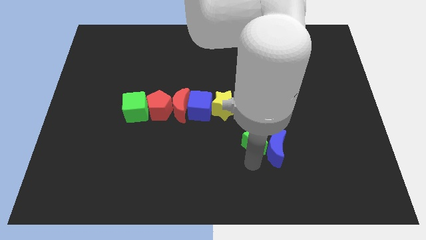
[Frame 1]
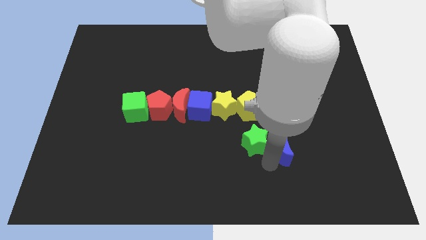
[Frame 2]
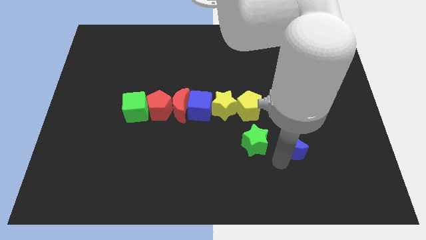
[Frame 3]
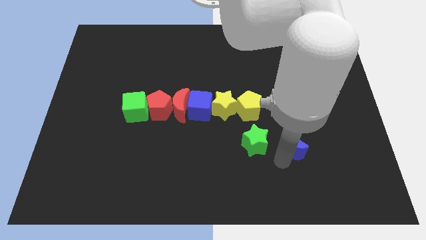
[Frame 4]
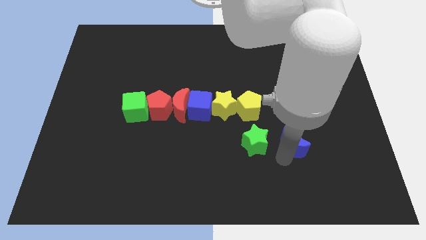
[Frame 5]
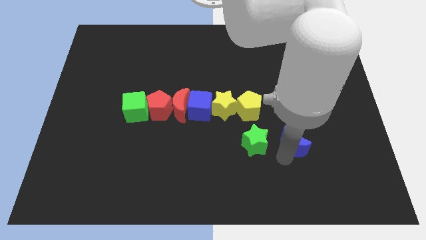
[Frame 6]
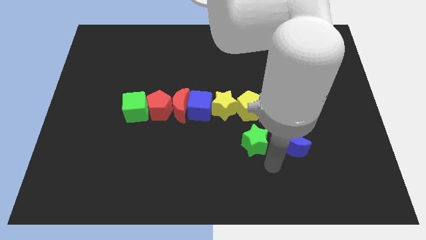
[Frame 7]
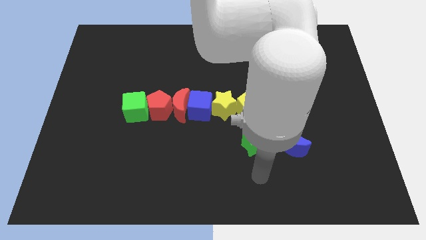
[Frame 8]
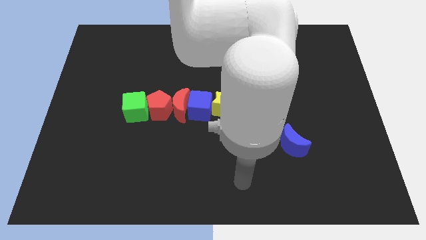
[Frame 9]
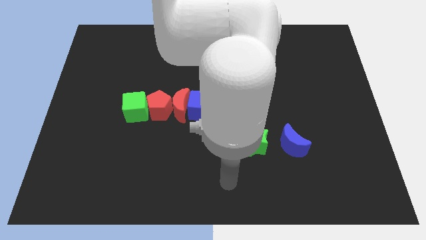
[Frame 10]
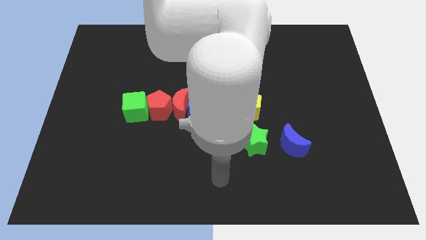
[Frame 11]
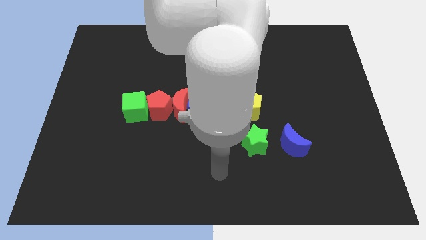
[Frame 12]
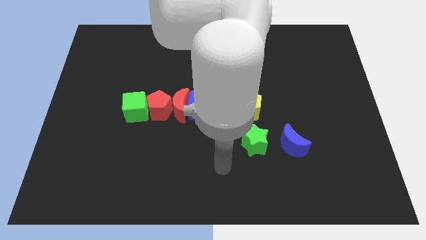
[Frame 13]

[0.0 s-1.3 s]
separate the blue moon from the green star

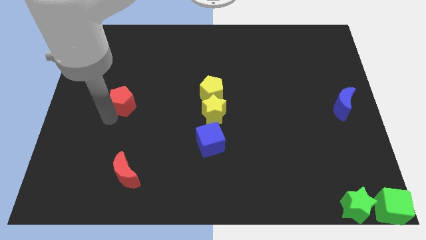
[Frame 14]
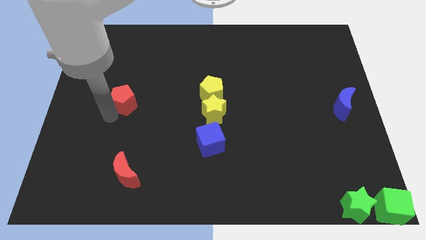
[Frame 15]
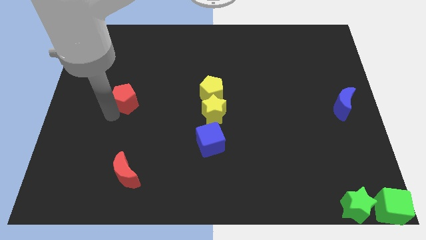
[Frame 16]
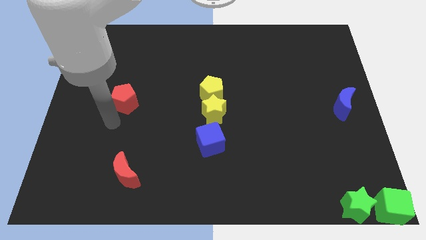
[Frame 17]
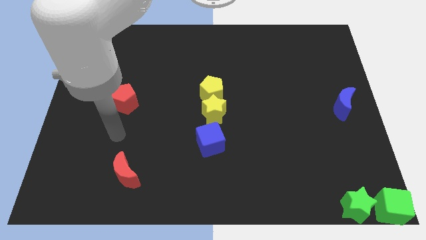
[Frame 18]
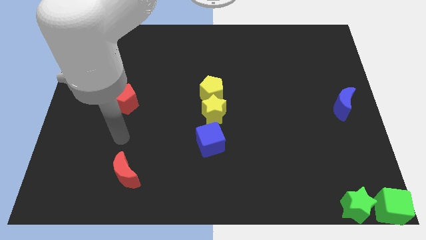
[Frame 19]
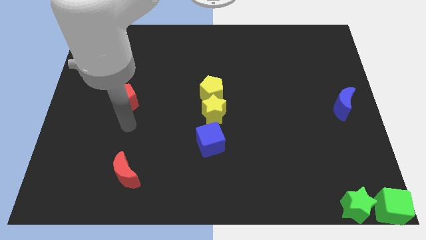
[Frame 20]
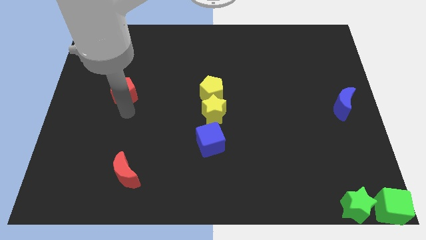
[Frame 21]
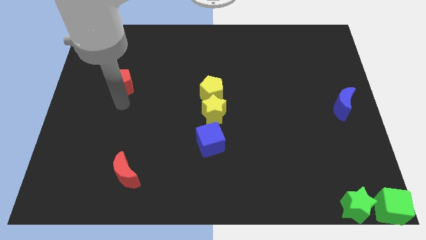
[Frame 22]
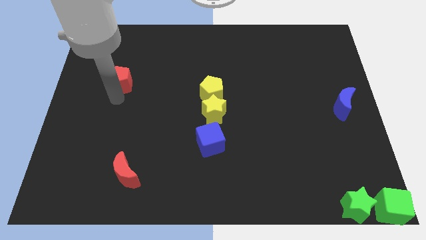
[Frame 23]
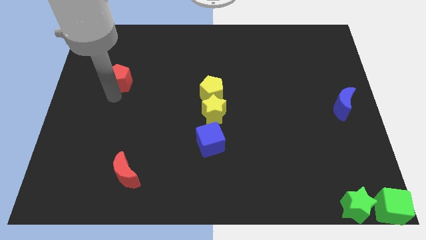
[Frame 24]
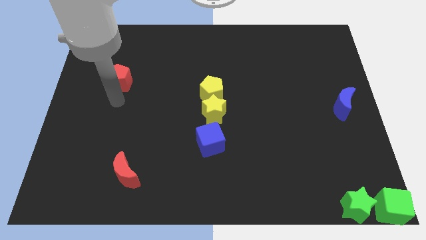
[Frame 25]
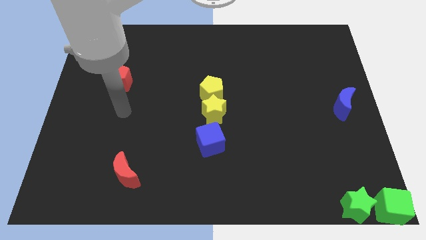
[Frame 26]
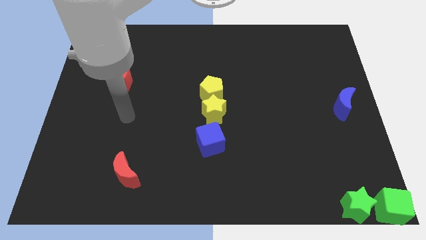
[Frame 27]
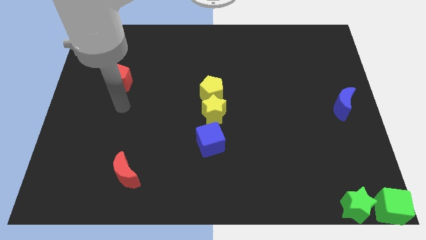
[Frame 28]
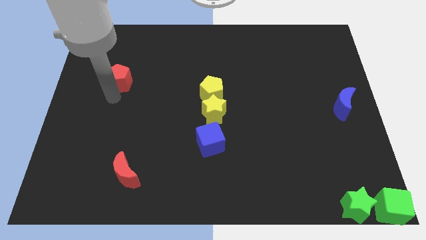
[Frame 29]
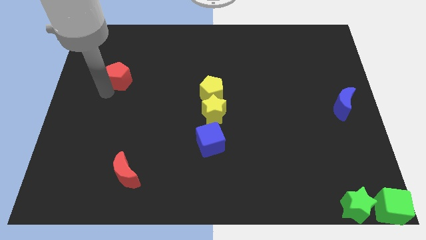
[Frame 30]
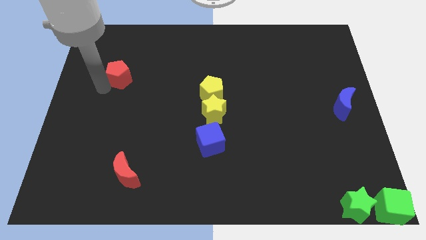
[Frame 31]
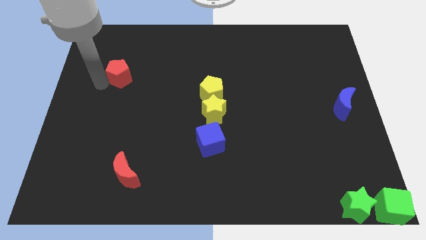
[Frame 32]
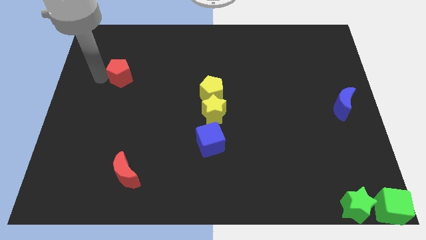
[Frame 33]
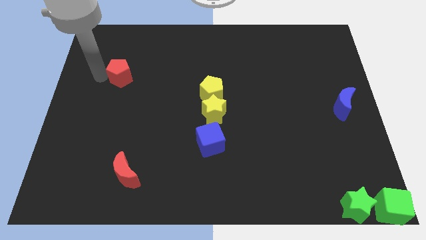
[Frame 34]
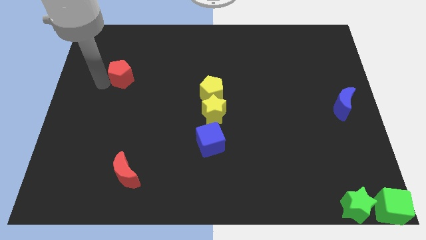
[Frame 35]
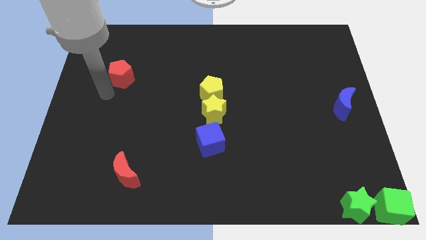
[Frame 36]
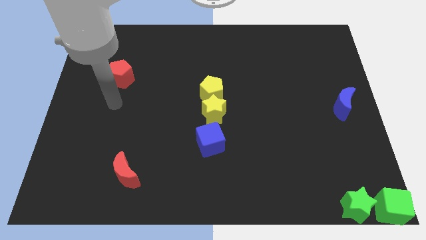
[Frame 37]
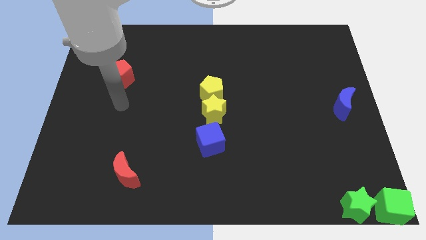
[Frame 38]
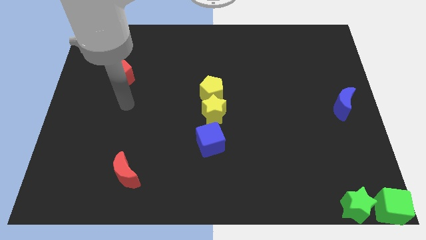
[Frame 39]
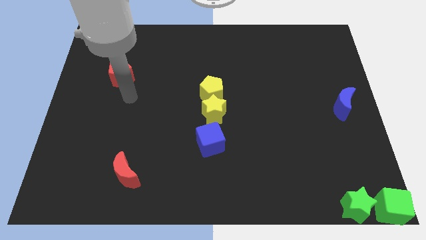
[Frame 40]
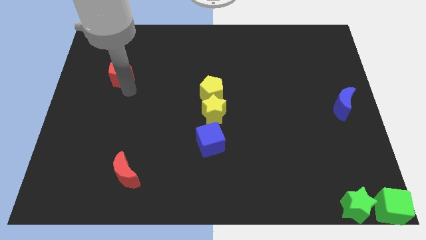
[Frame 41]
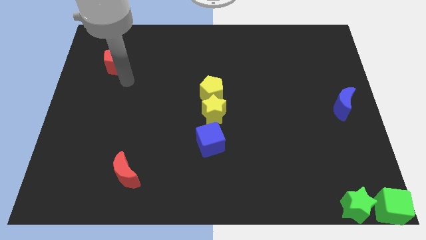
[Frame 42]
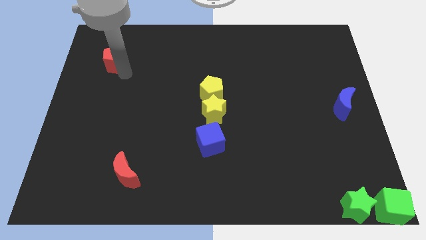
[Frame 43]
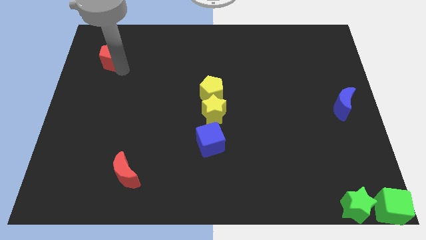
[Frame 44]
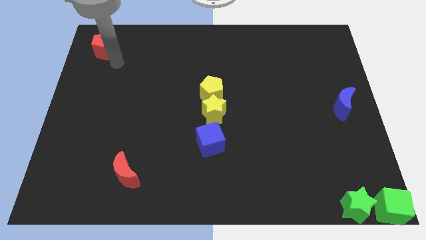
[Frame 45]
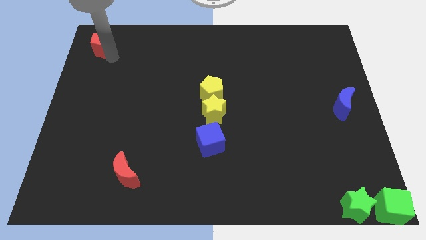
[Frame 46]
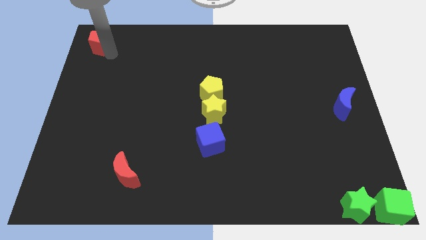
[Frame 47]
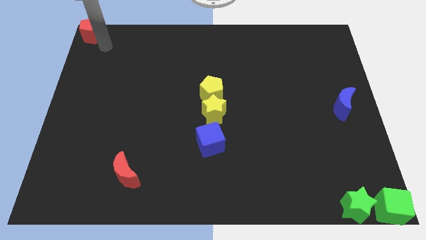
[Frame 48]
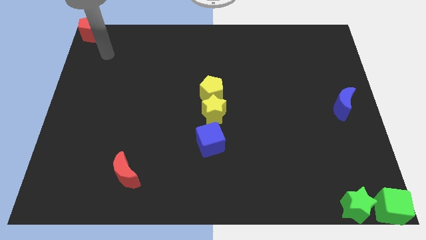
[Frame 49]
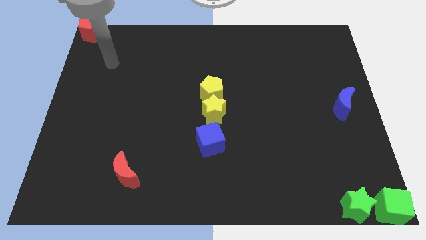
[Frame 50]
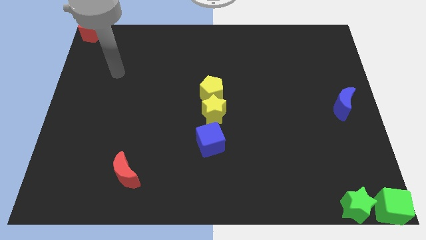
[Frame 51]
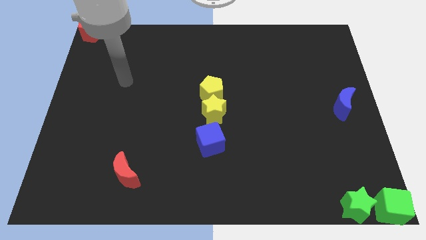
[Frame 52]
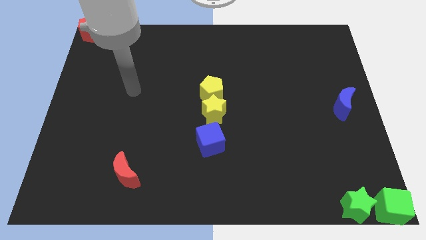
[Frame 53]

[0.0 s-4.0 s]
move the red pentagon to the top left corner of the board

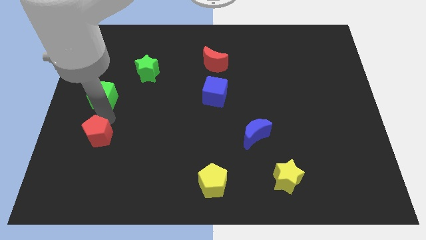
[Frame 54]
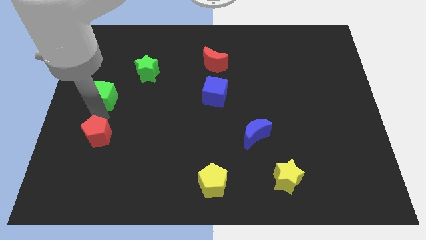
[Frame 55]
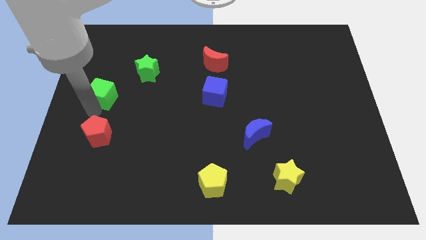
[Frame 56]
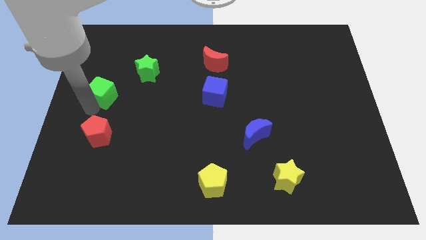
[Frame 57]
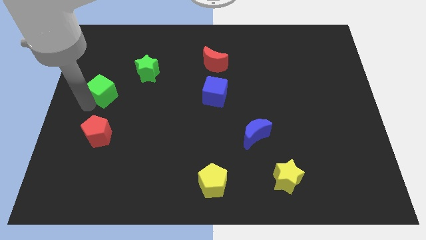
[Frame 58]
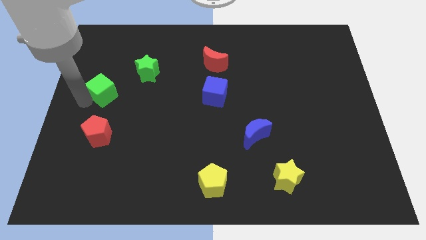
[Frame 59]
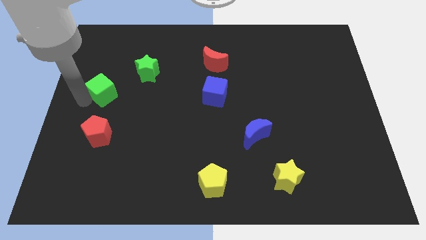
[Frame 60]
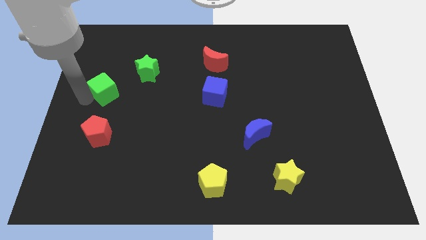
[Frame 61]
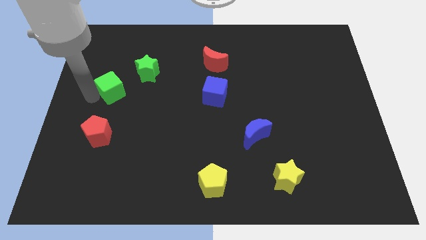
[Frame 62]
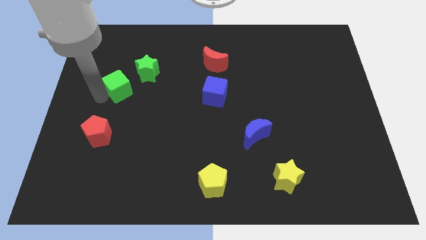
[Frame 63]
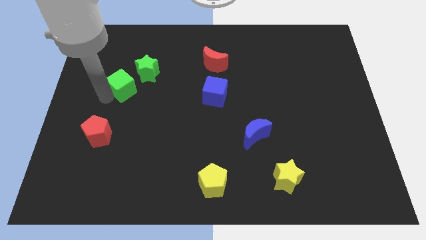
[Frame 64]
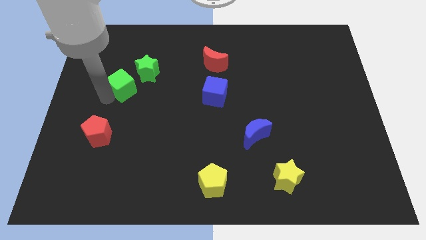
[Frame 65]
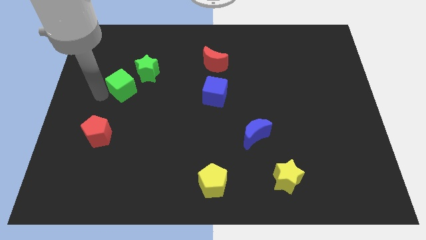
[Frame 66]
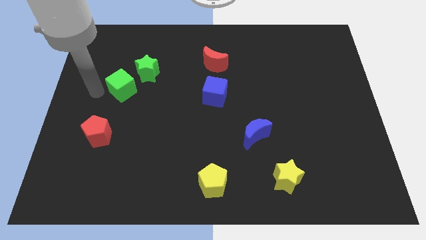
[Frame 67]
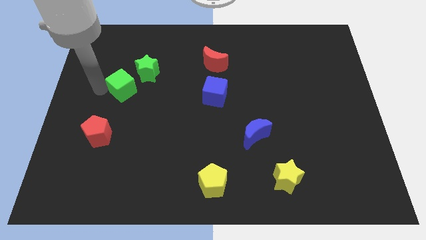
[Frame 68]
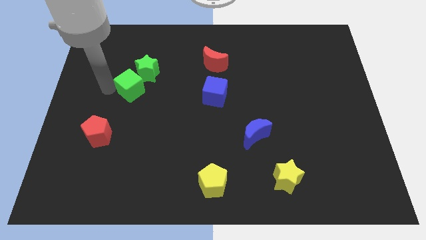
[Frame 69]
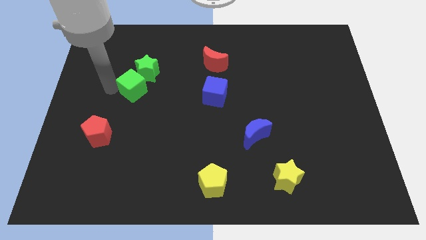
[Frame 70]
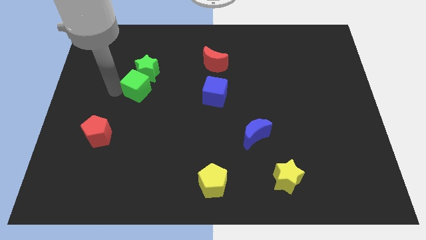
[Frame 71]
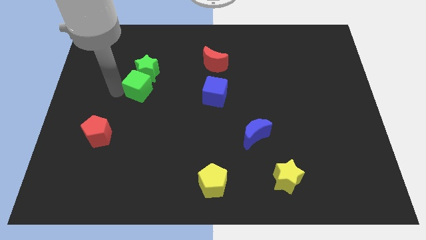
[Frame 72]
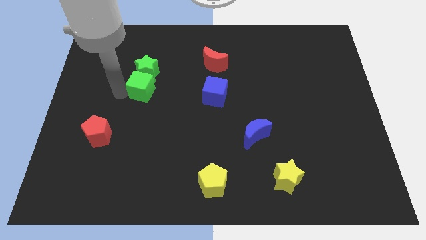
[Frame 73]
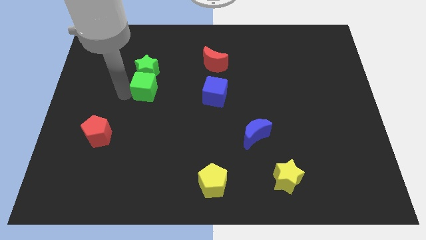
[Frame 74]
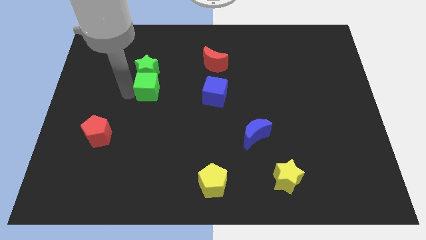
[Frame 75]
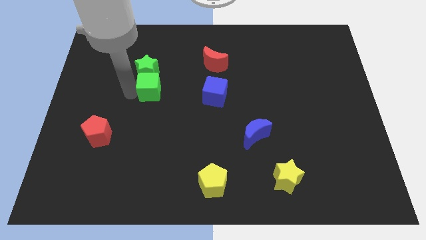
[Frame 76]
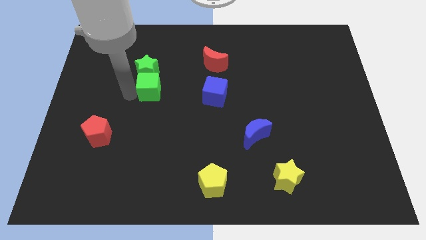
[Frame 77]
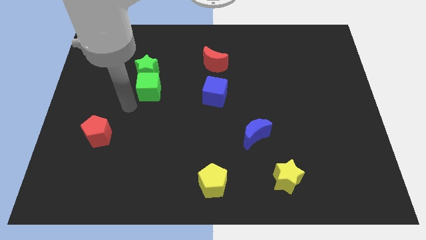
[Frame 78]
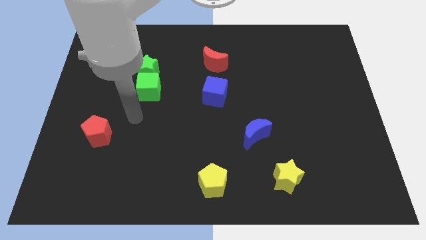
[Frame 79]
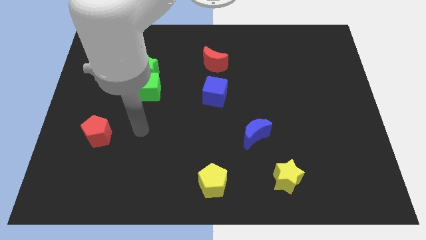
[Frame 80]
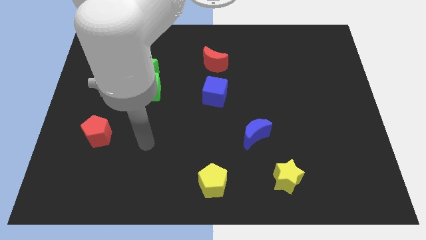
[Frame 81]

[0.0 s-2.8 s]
push the green cube to the bottom of the green star

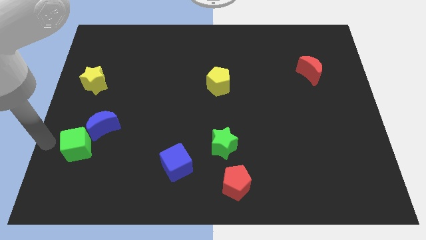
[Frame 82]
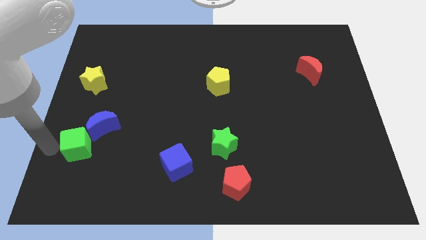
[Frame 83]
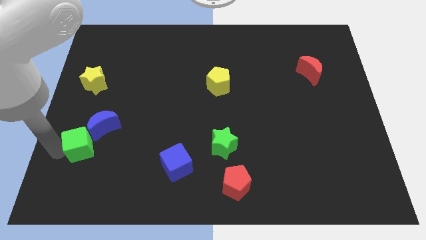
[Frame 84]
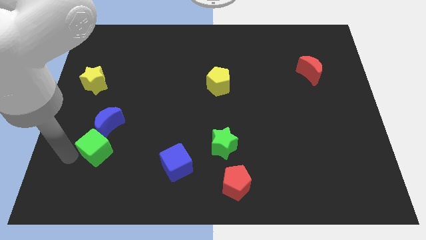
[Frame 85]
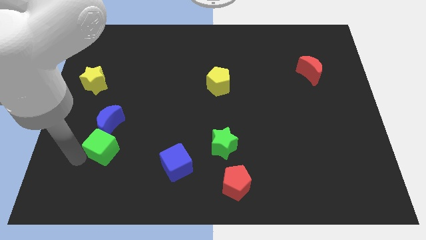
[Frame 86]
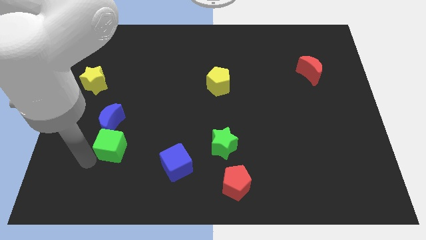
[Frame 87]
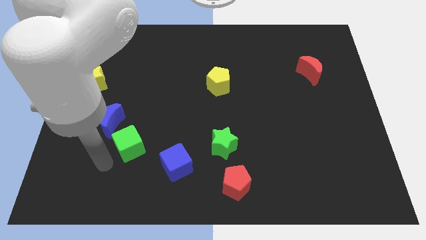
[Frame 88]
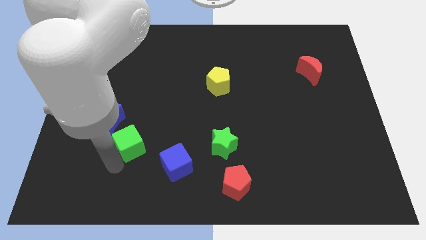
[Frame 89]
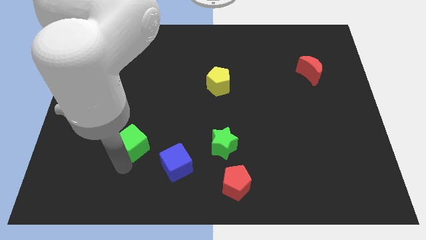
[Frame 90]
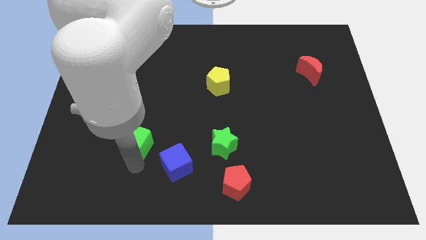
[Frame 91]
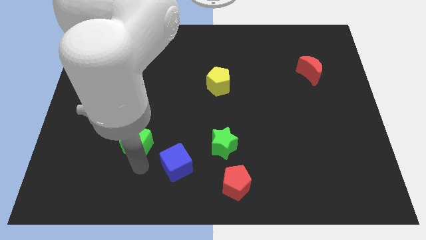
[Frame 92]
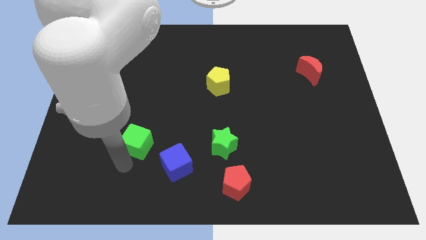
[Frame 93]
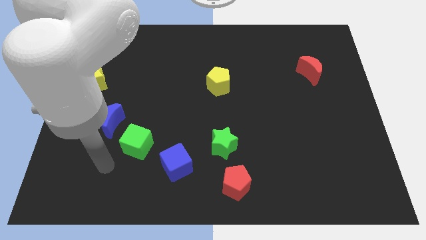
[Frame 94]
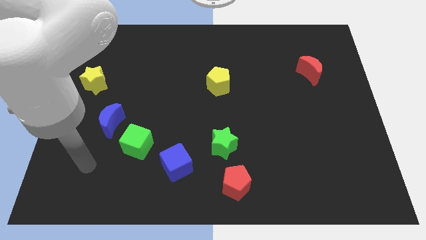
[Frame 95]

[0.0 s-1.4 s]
put the green cube at the bottom right side of the blue crescent
